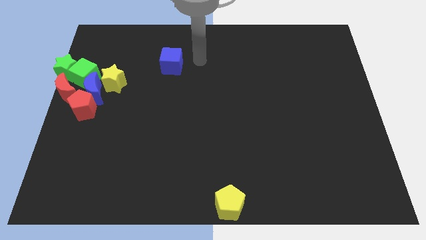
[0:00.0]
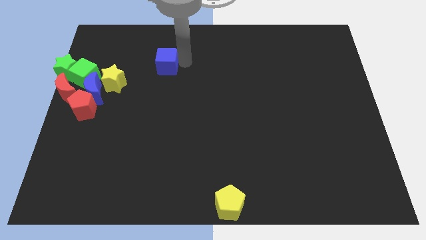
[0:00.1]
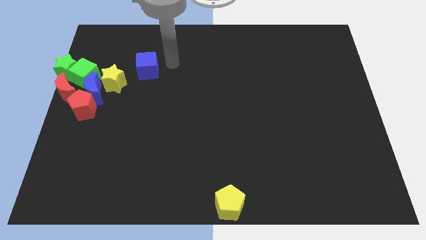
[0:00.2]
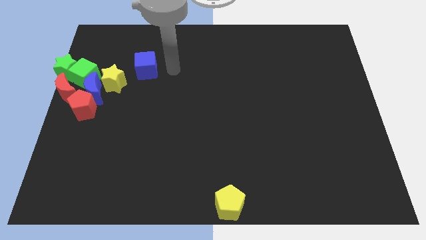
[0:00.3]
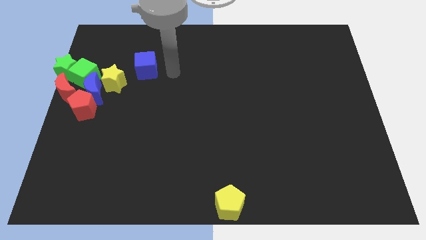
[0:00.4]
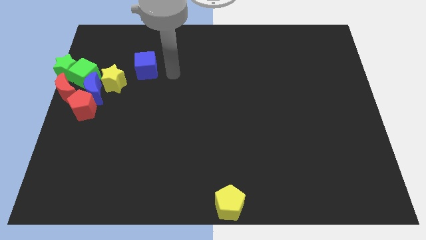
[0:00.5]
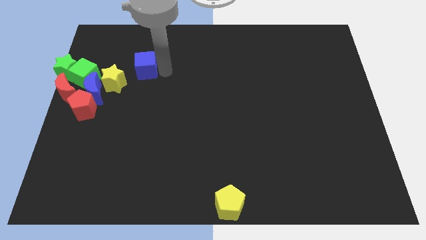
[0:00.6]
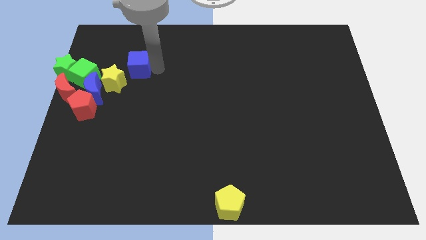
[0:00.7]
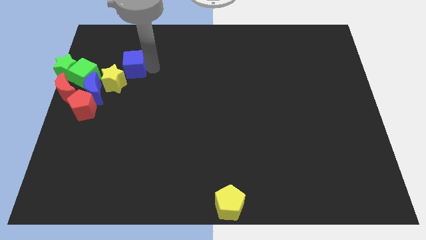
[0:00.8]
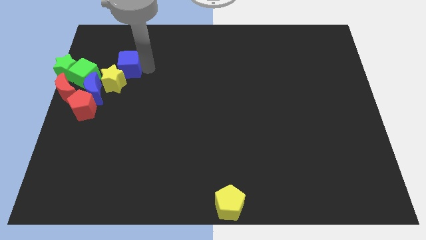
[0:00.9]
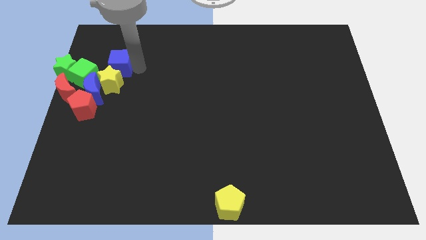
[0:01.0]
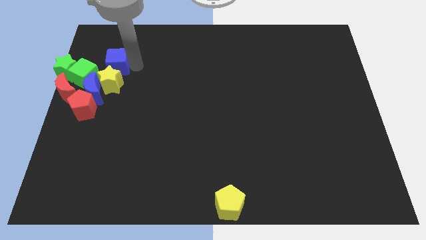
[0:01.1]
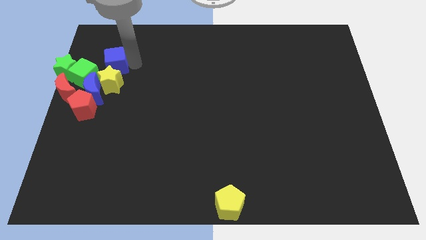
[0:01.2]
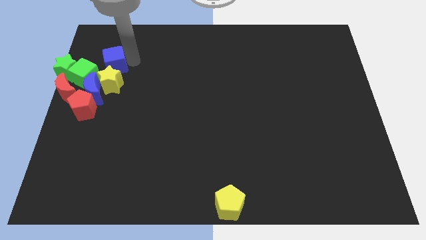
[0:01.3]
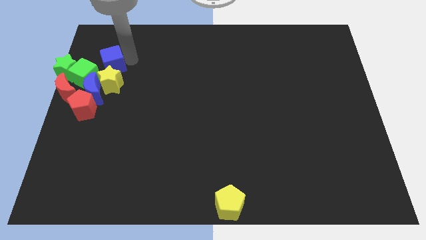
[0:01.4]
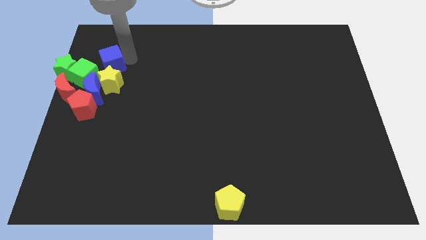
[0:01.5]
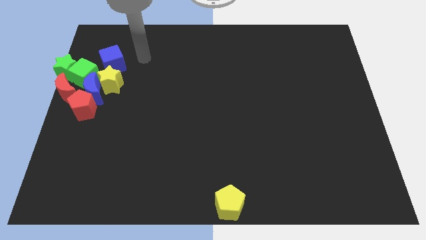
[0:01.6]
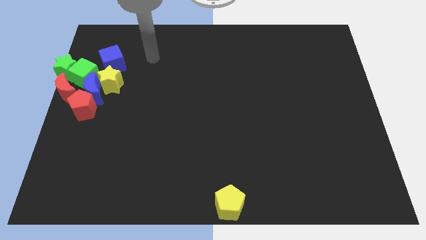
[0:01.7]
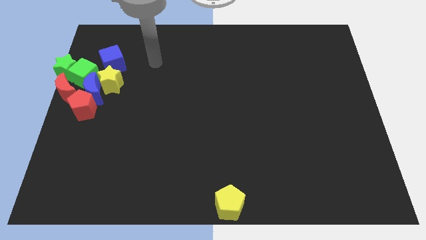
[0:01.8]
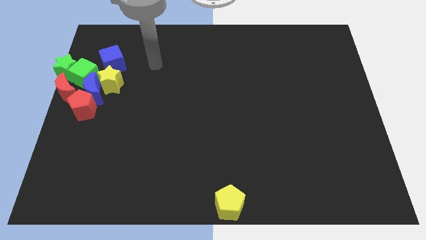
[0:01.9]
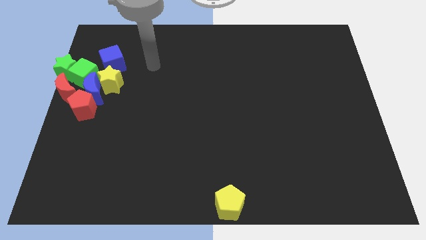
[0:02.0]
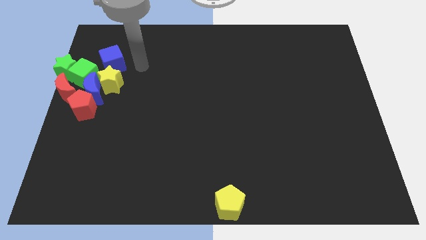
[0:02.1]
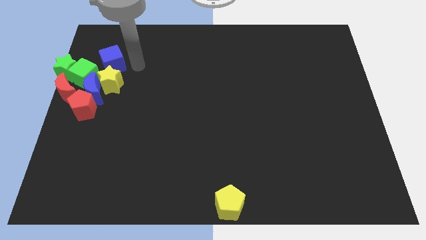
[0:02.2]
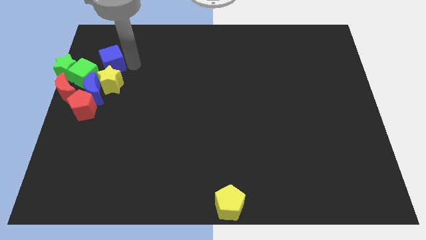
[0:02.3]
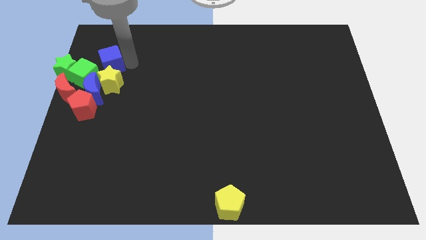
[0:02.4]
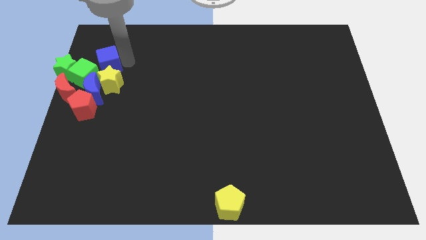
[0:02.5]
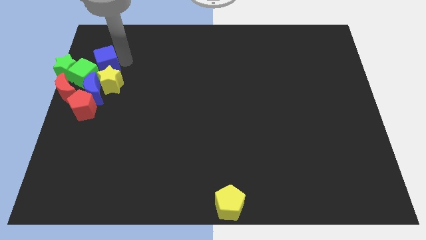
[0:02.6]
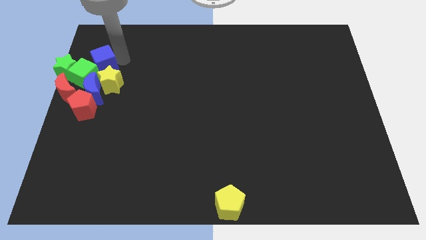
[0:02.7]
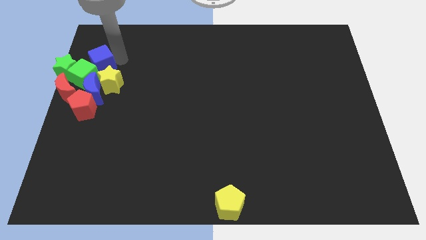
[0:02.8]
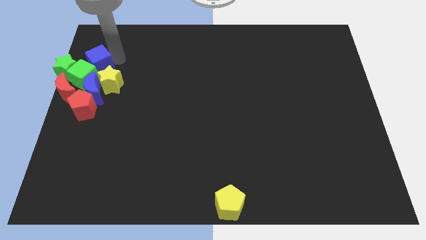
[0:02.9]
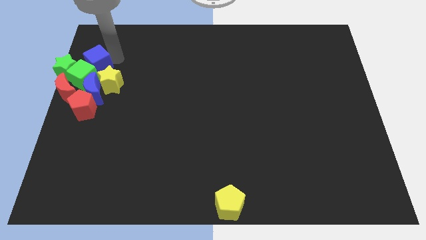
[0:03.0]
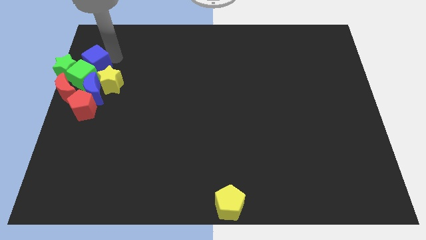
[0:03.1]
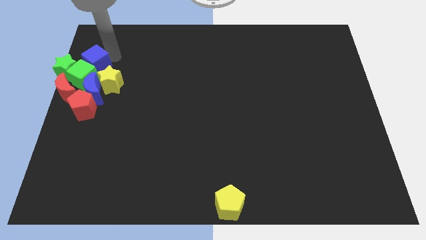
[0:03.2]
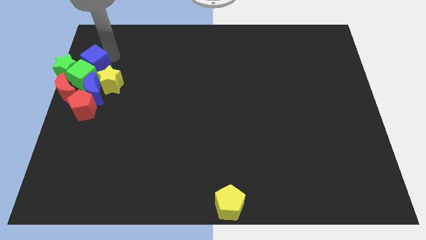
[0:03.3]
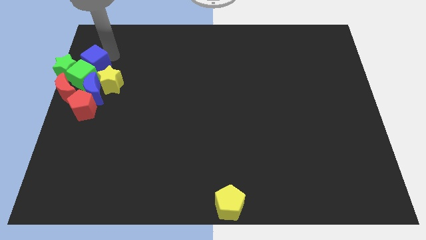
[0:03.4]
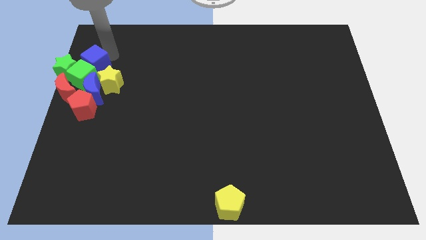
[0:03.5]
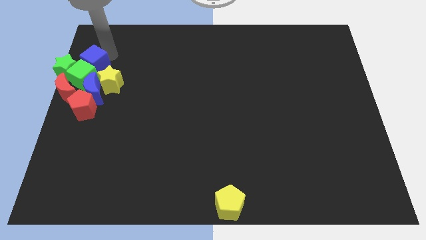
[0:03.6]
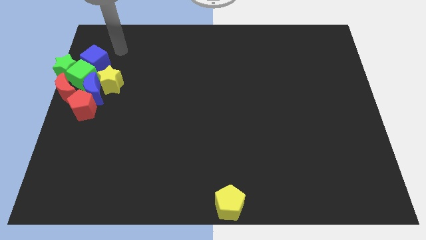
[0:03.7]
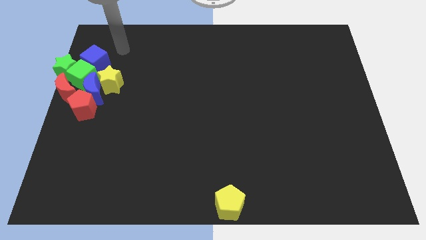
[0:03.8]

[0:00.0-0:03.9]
push the blue cube into the green cube

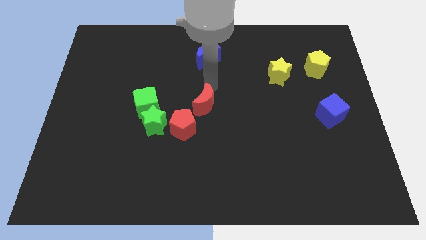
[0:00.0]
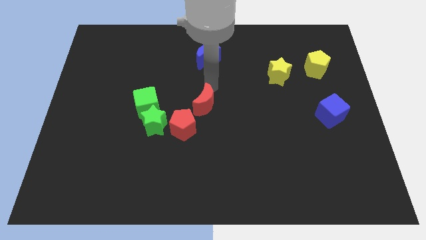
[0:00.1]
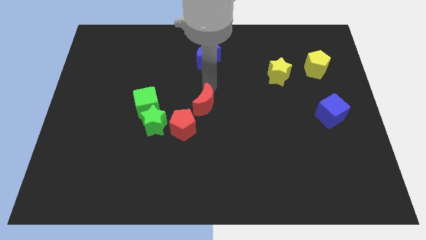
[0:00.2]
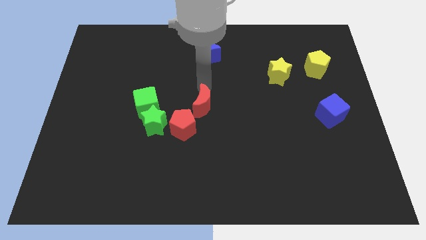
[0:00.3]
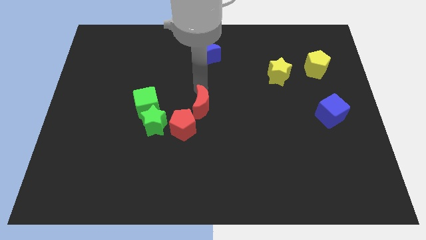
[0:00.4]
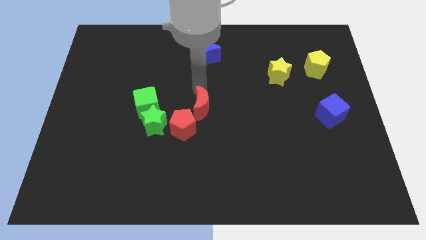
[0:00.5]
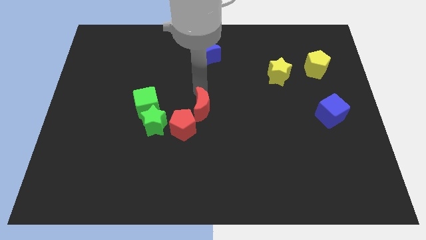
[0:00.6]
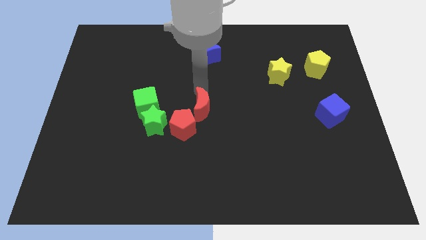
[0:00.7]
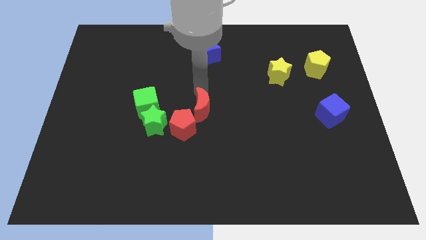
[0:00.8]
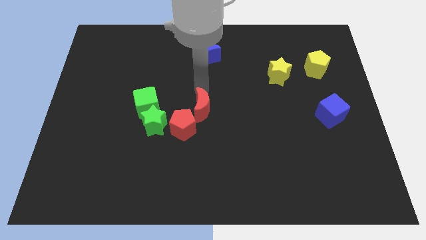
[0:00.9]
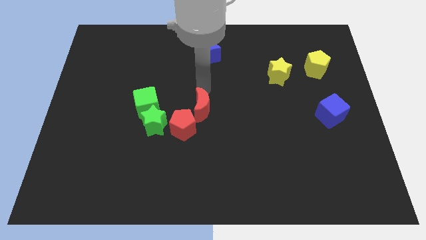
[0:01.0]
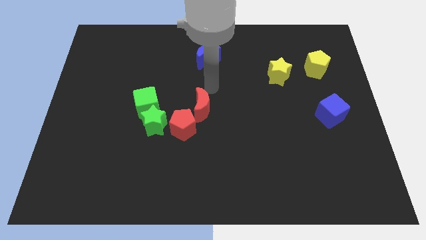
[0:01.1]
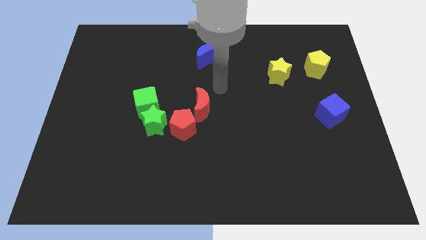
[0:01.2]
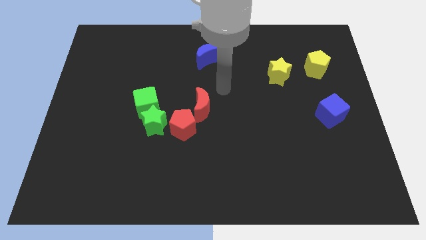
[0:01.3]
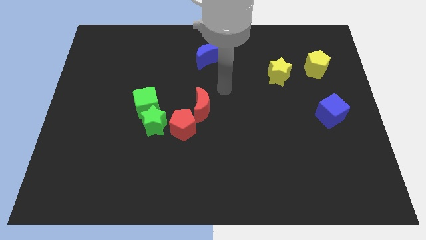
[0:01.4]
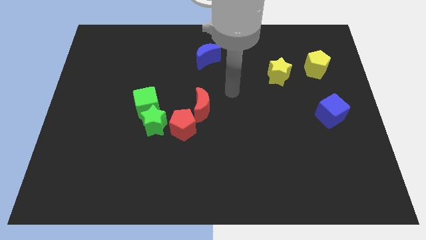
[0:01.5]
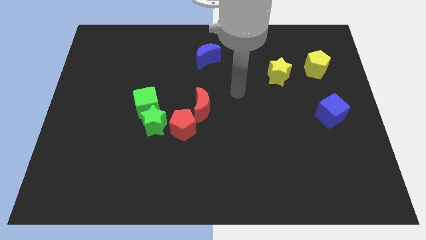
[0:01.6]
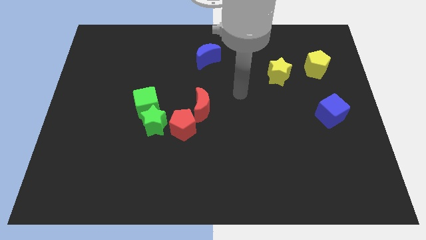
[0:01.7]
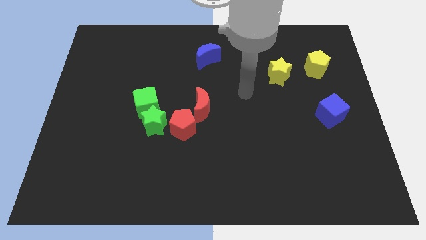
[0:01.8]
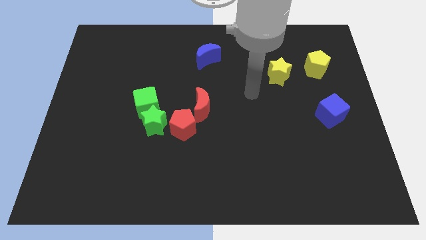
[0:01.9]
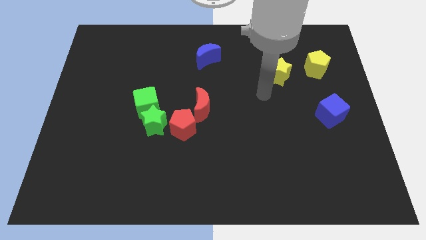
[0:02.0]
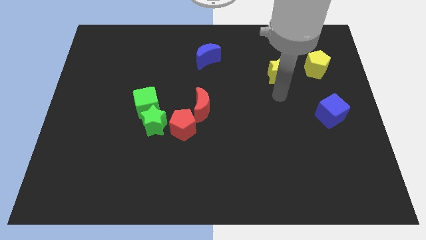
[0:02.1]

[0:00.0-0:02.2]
move the red moon into the red pentagon

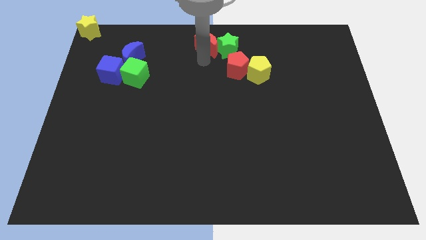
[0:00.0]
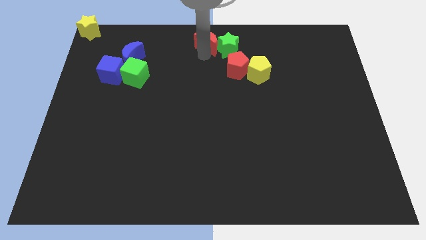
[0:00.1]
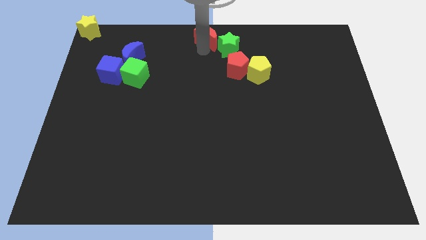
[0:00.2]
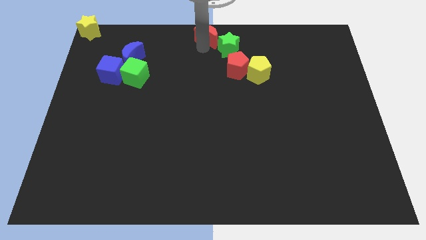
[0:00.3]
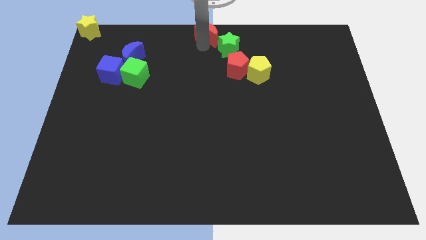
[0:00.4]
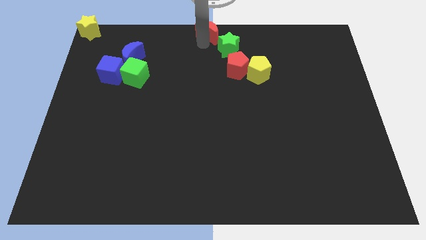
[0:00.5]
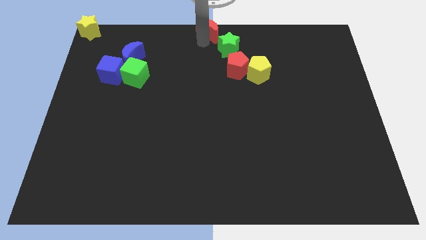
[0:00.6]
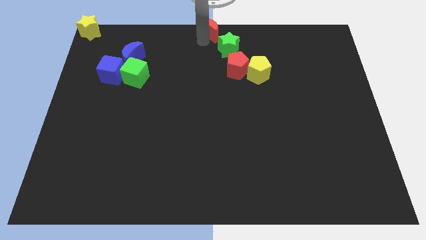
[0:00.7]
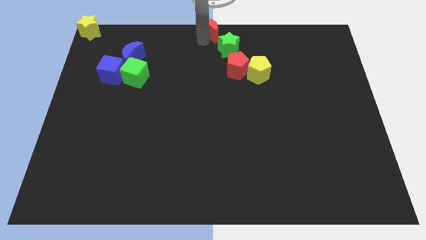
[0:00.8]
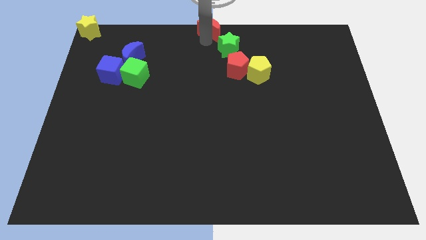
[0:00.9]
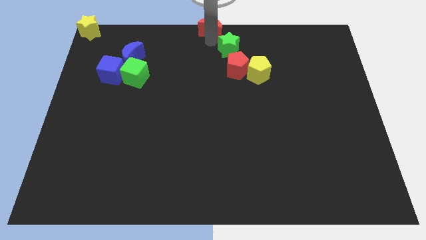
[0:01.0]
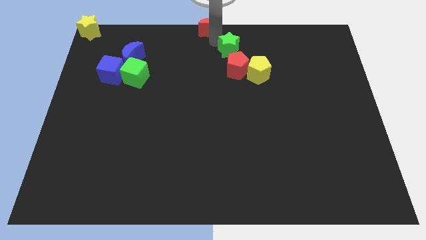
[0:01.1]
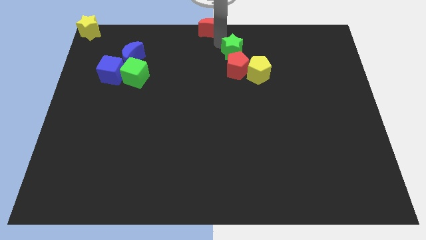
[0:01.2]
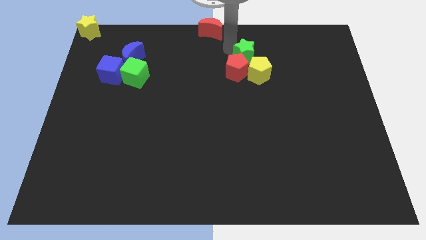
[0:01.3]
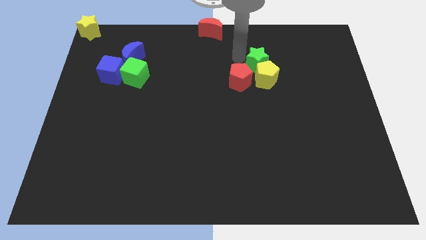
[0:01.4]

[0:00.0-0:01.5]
separate the red moon and green star

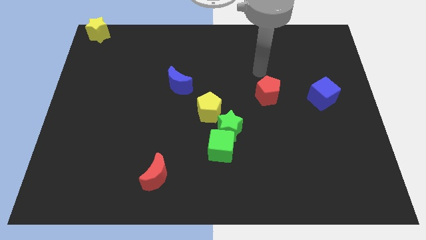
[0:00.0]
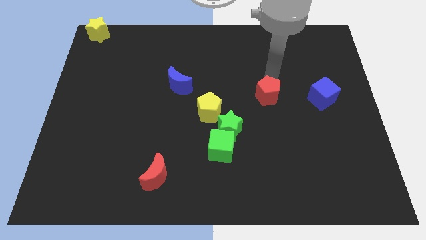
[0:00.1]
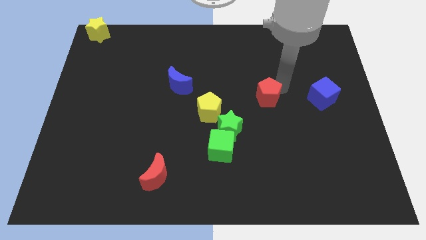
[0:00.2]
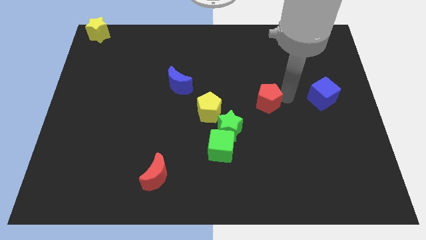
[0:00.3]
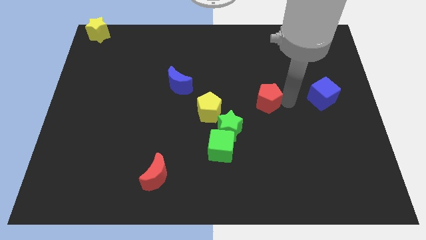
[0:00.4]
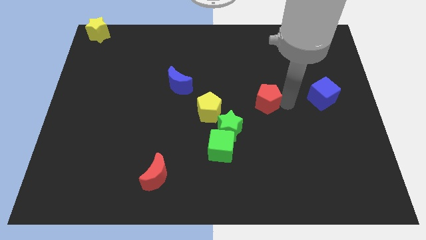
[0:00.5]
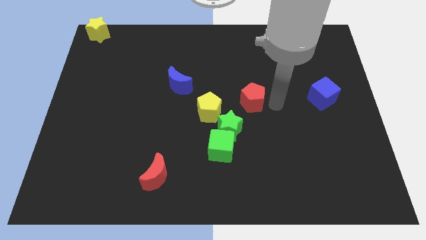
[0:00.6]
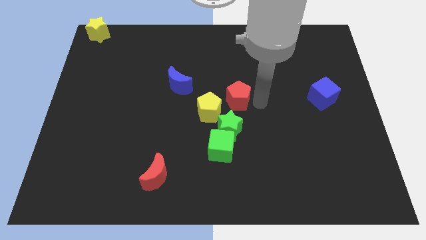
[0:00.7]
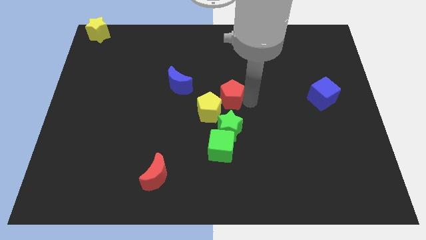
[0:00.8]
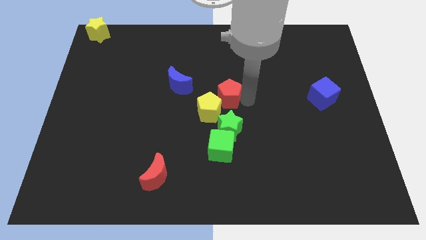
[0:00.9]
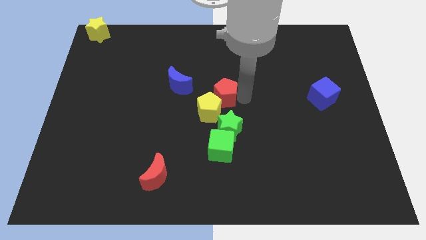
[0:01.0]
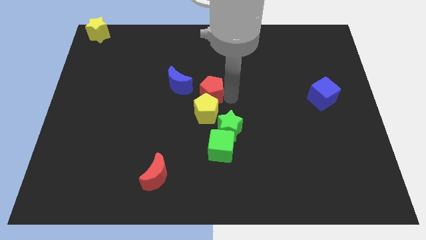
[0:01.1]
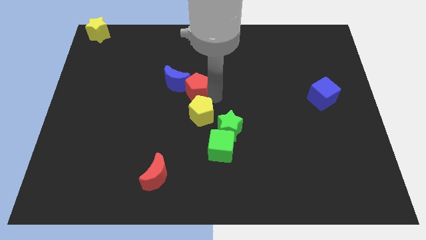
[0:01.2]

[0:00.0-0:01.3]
move the red pentagon at the top of the yellow pentagon
